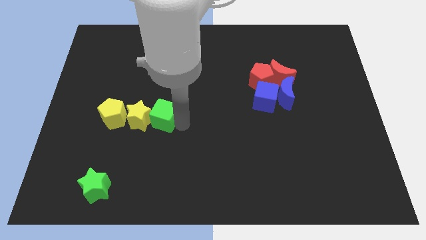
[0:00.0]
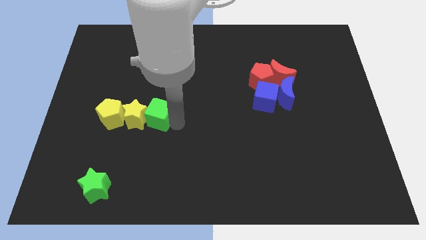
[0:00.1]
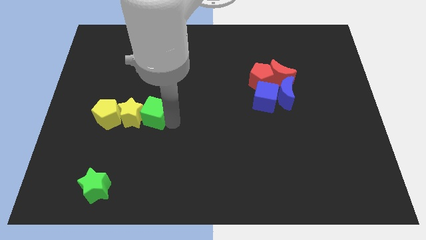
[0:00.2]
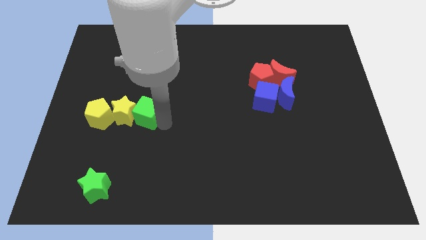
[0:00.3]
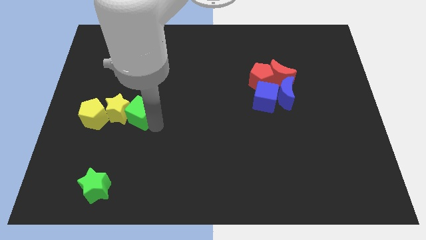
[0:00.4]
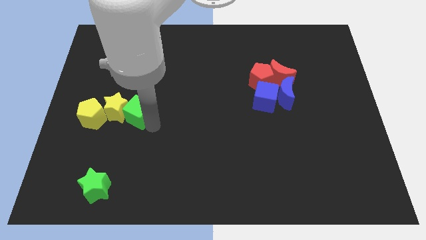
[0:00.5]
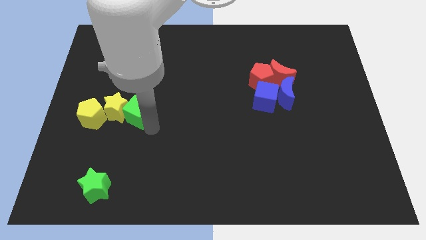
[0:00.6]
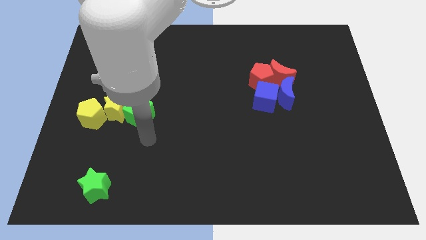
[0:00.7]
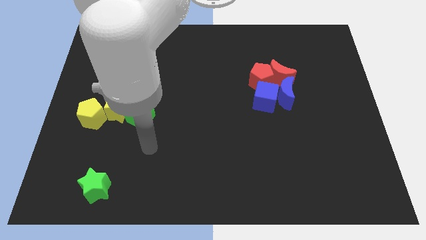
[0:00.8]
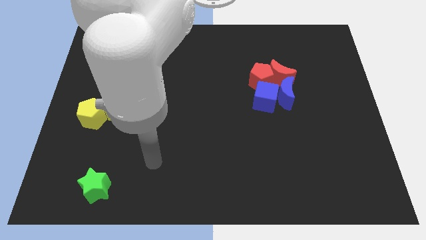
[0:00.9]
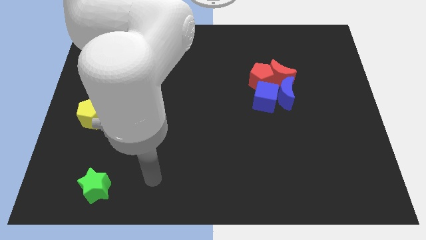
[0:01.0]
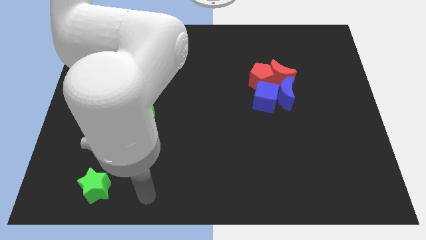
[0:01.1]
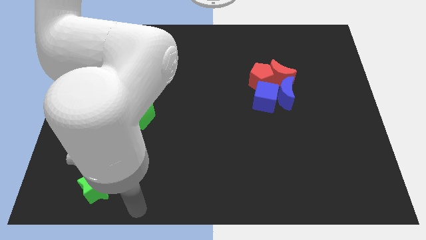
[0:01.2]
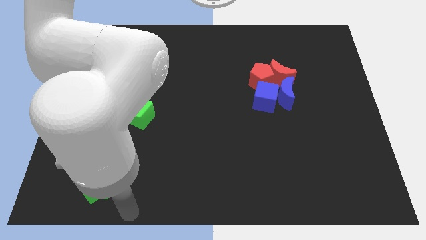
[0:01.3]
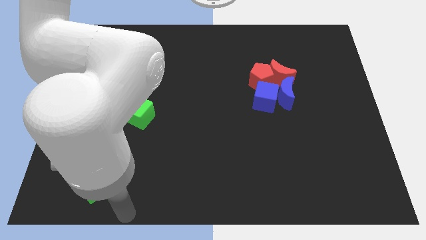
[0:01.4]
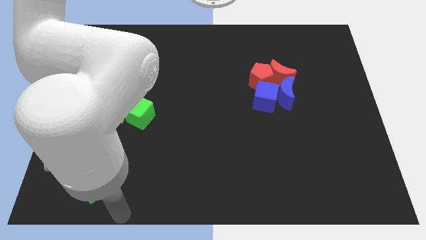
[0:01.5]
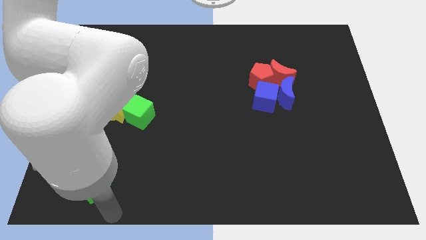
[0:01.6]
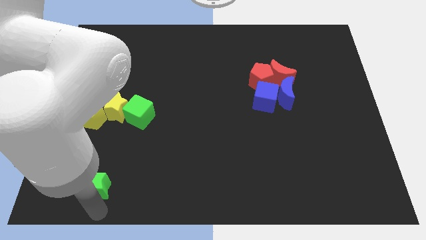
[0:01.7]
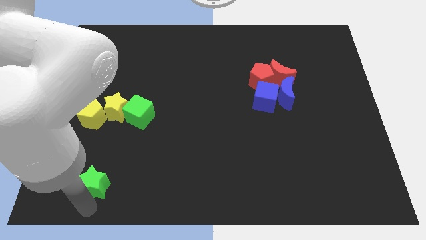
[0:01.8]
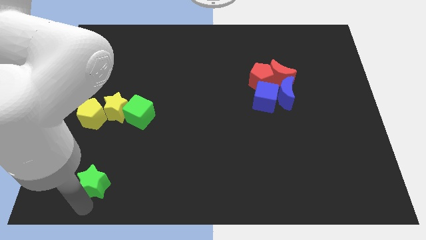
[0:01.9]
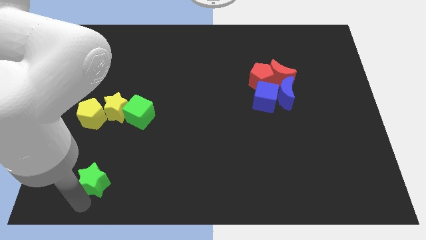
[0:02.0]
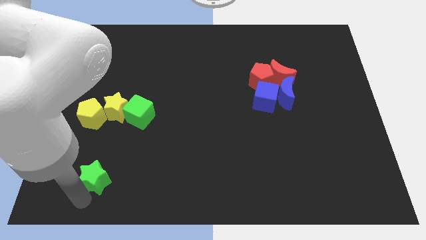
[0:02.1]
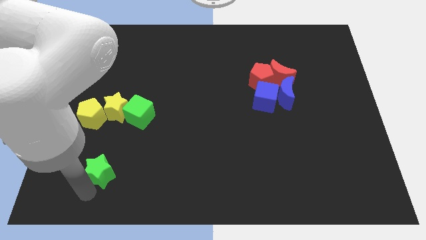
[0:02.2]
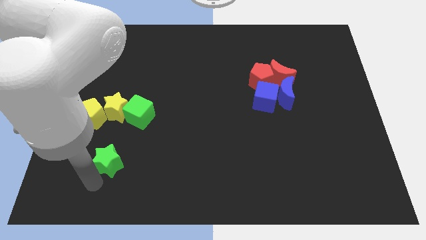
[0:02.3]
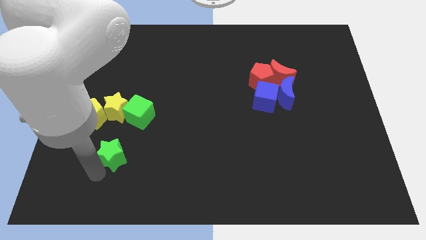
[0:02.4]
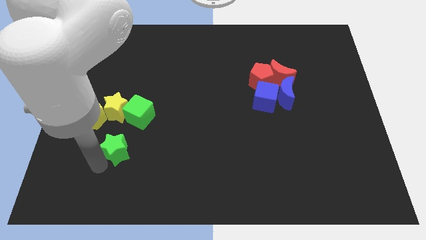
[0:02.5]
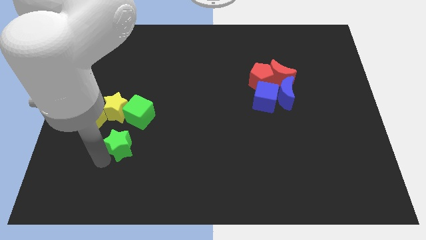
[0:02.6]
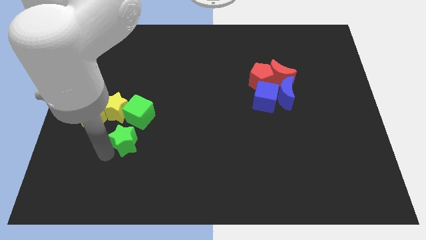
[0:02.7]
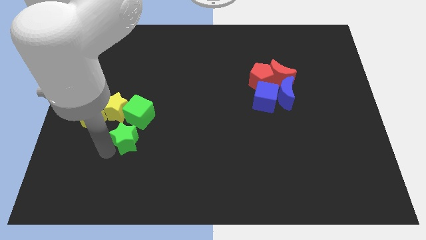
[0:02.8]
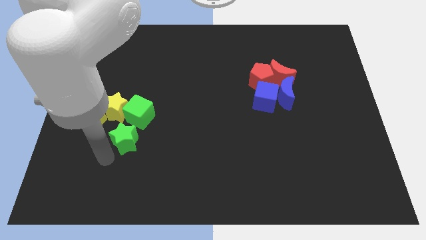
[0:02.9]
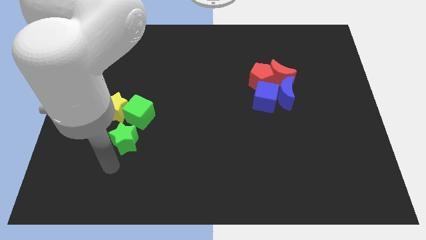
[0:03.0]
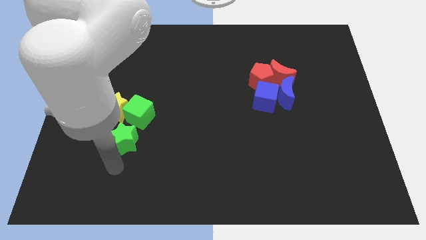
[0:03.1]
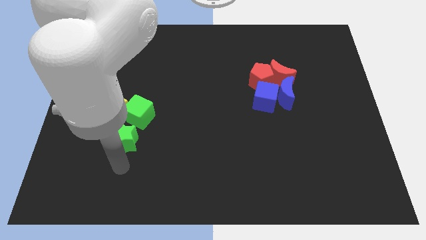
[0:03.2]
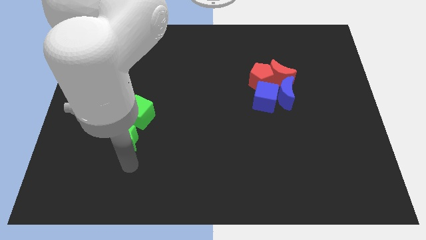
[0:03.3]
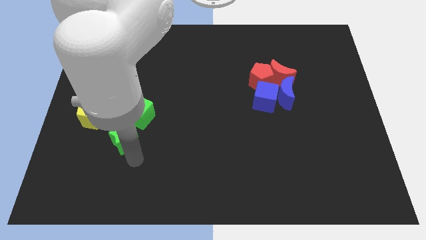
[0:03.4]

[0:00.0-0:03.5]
place the green star below to the green cube

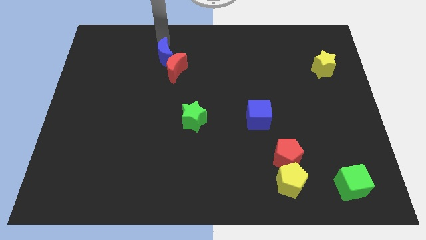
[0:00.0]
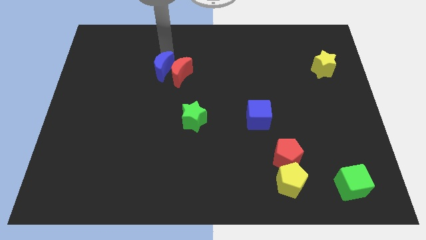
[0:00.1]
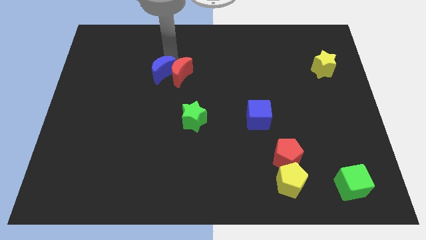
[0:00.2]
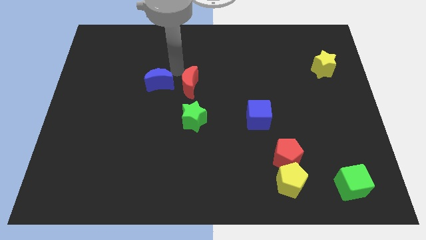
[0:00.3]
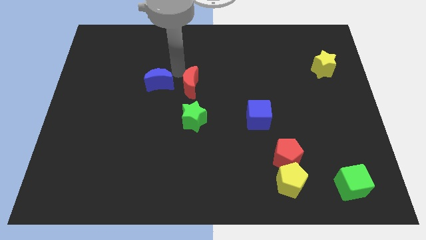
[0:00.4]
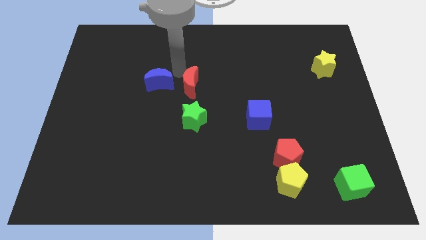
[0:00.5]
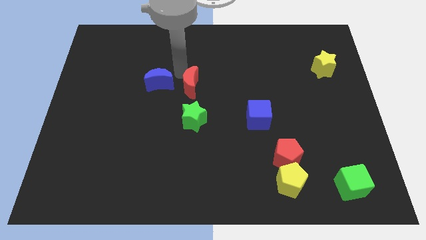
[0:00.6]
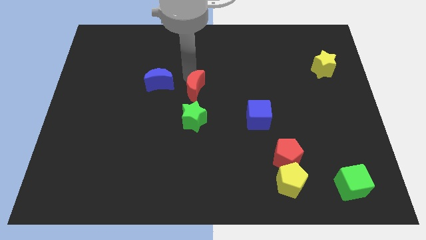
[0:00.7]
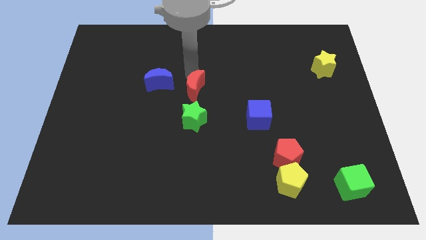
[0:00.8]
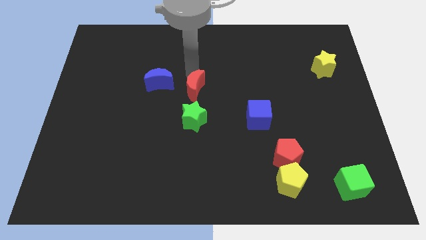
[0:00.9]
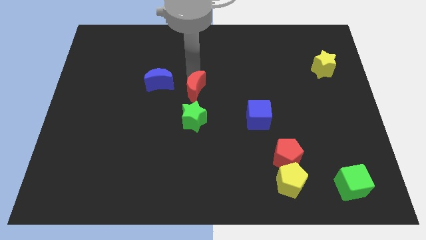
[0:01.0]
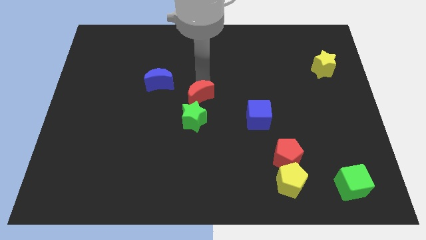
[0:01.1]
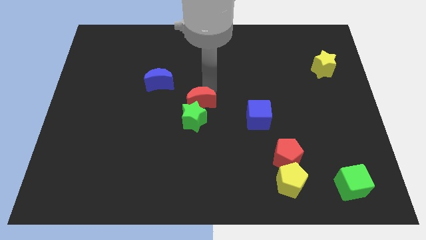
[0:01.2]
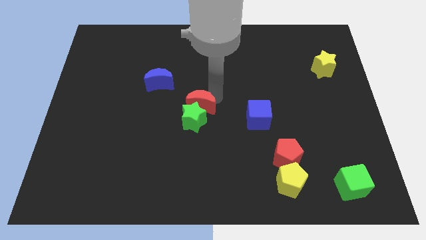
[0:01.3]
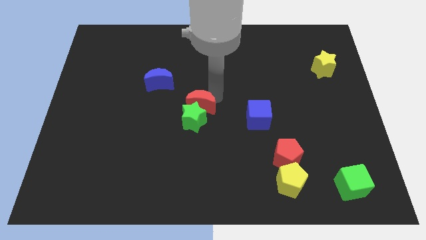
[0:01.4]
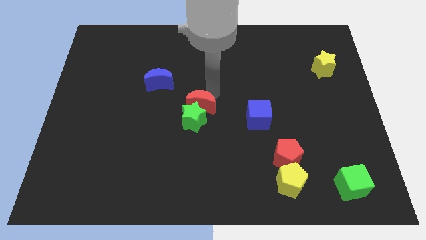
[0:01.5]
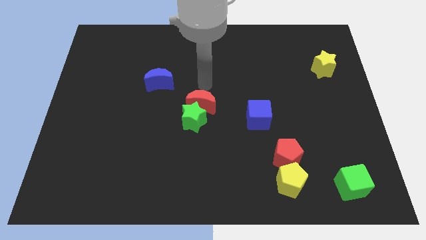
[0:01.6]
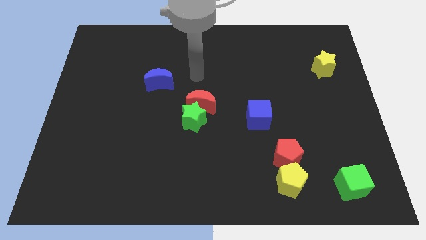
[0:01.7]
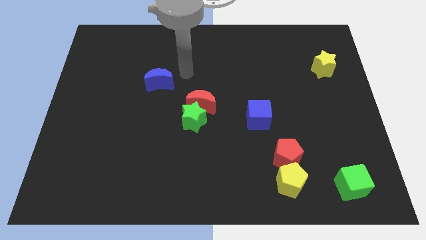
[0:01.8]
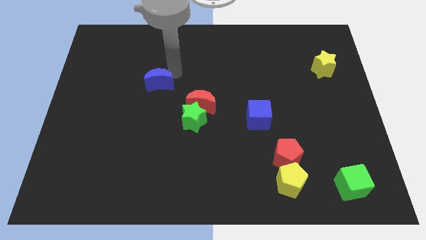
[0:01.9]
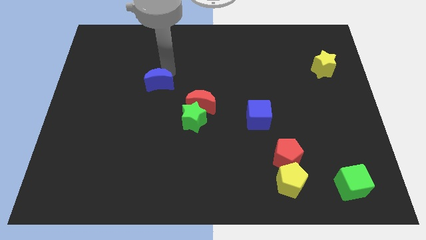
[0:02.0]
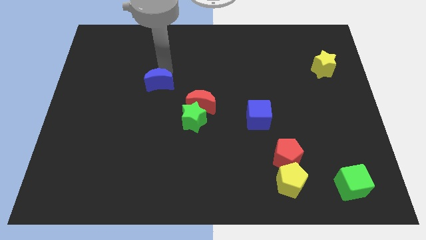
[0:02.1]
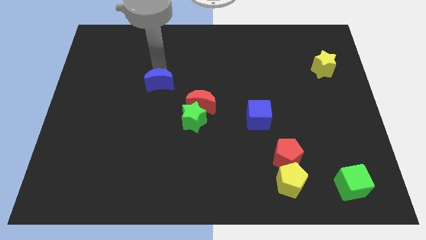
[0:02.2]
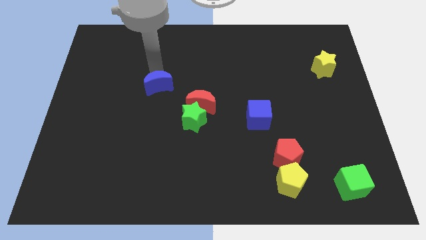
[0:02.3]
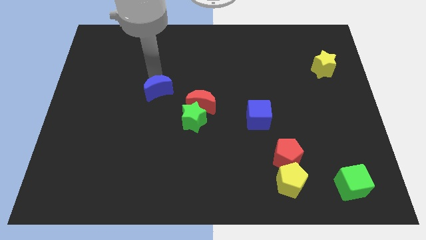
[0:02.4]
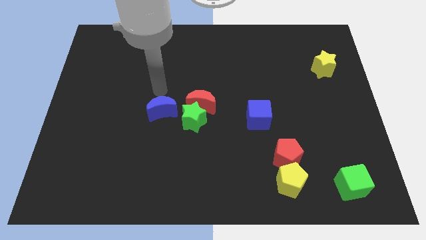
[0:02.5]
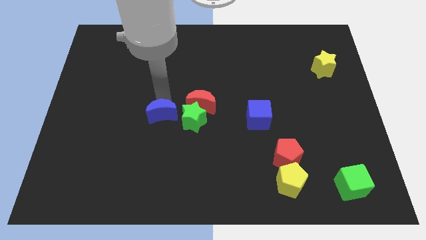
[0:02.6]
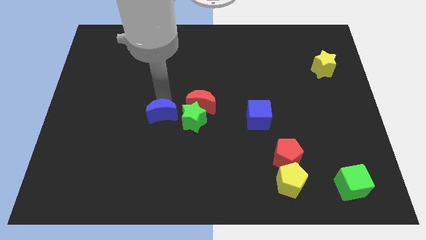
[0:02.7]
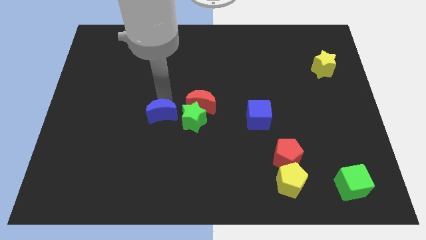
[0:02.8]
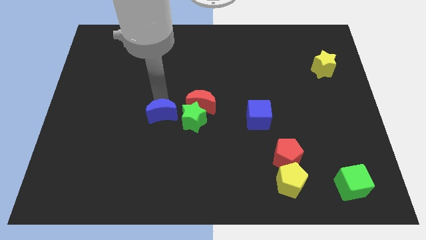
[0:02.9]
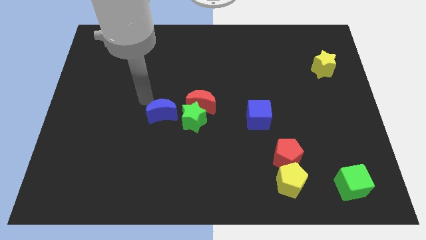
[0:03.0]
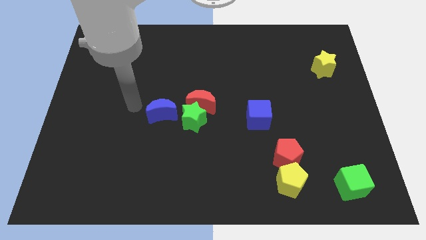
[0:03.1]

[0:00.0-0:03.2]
separate blue moon and the red moon

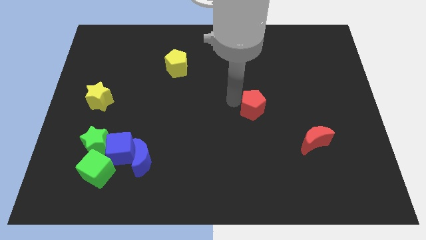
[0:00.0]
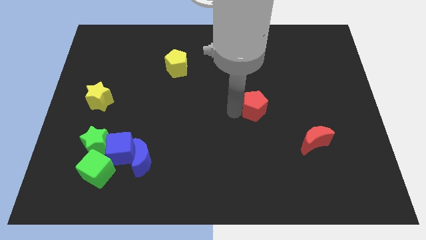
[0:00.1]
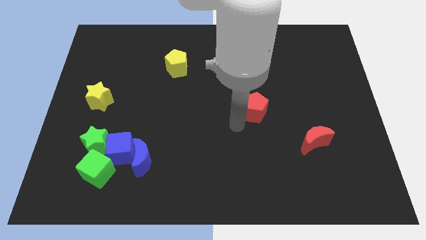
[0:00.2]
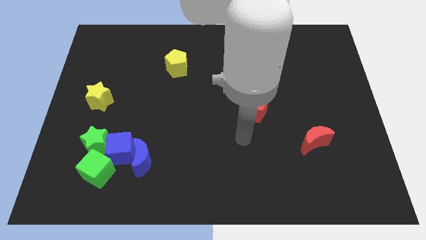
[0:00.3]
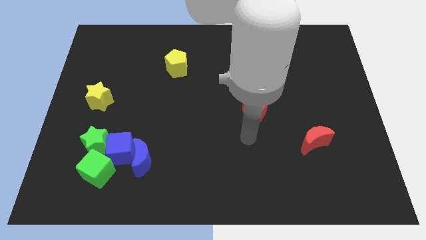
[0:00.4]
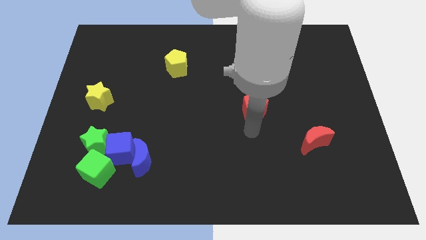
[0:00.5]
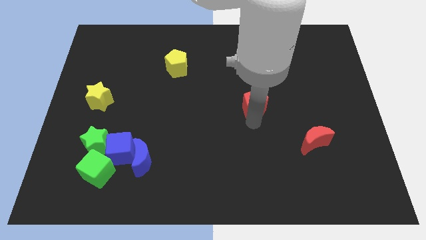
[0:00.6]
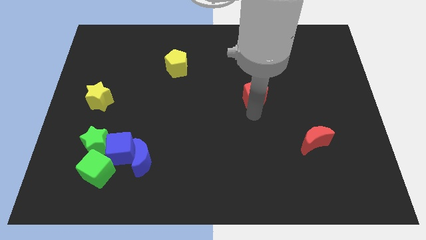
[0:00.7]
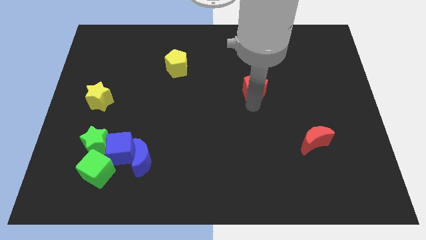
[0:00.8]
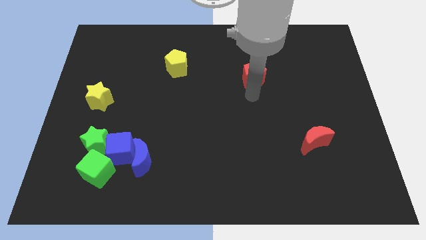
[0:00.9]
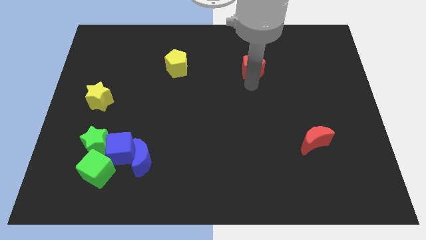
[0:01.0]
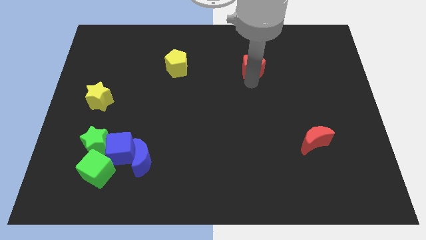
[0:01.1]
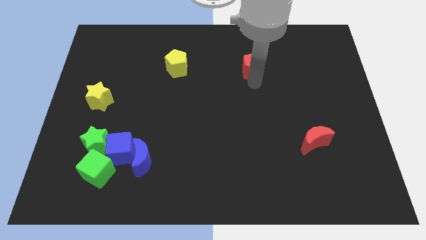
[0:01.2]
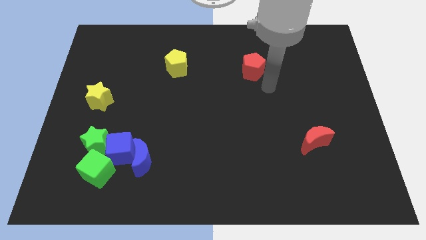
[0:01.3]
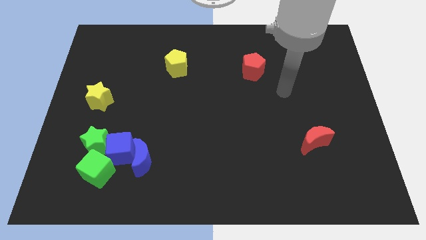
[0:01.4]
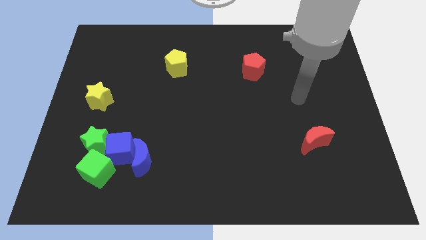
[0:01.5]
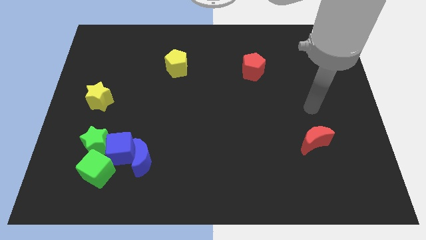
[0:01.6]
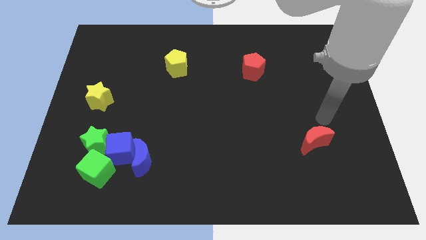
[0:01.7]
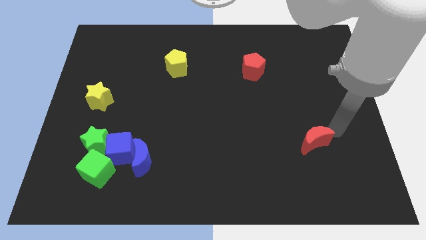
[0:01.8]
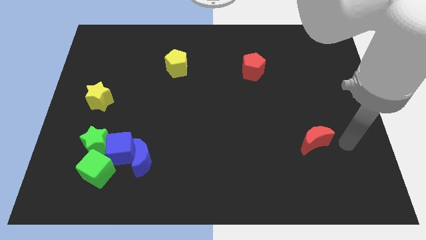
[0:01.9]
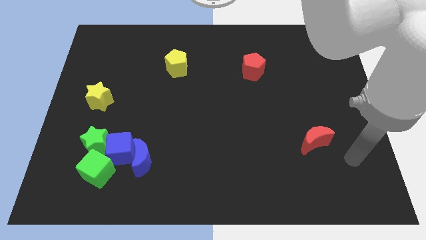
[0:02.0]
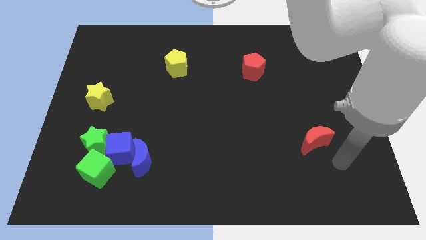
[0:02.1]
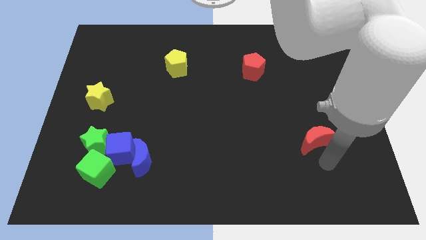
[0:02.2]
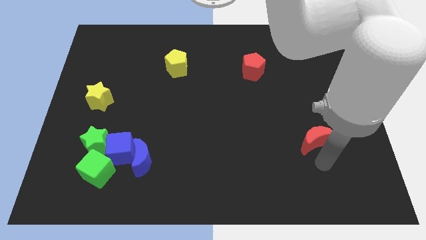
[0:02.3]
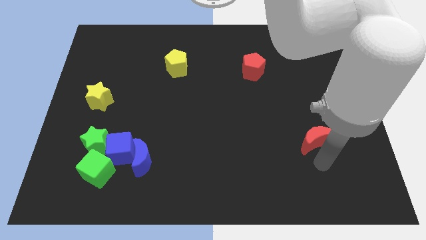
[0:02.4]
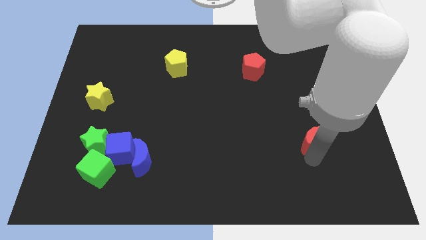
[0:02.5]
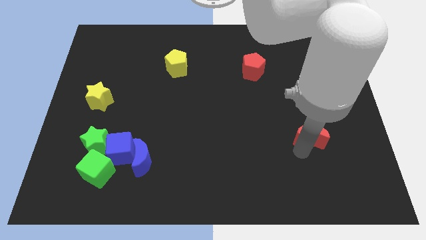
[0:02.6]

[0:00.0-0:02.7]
move the red pentagon towards the top center of the board
